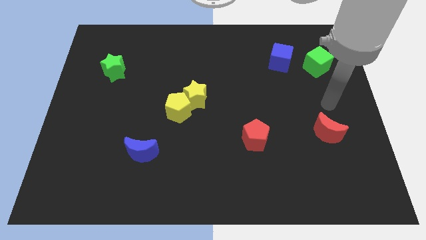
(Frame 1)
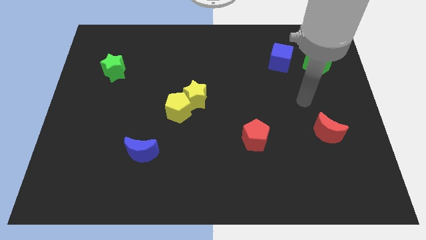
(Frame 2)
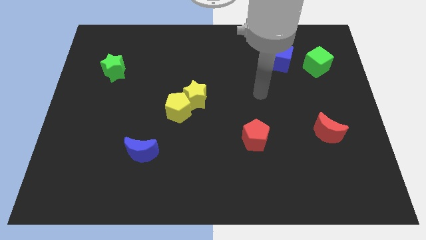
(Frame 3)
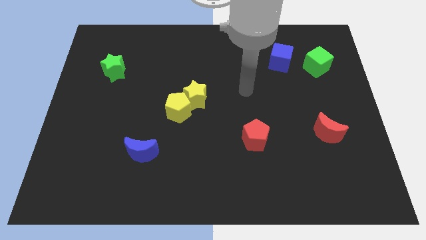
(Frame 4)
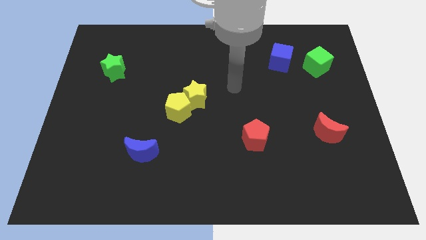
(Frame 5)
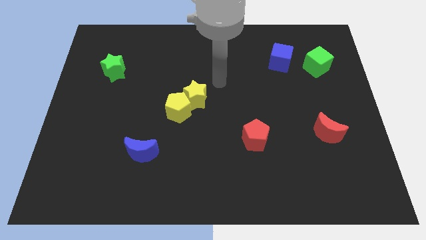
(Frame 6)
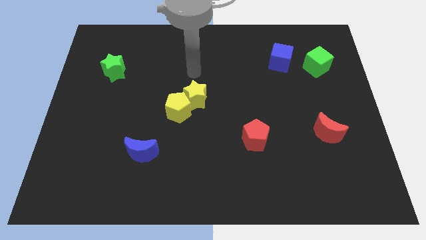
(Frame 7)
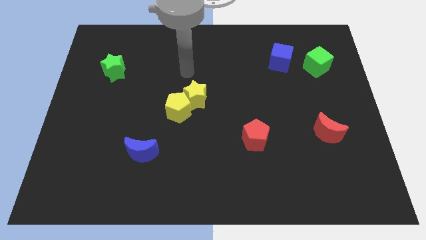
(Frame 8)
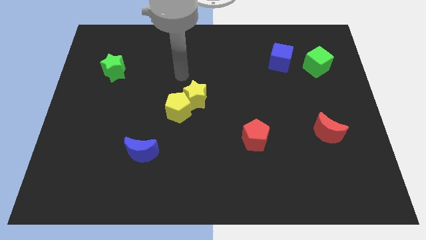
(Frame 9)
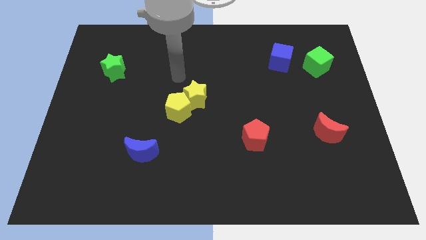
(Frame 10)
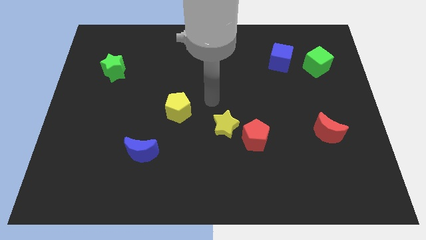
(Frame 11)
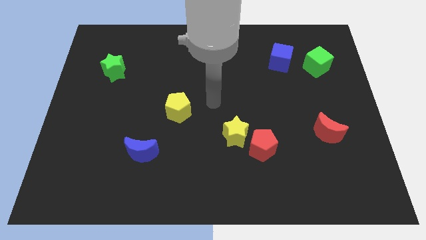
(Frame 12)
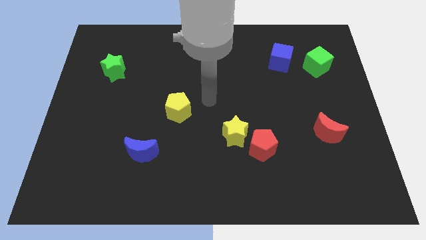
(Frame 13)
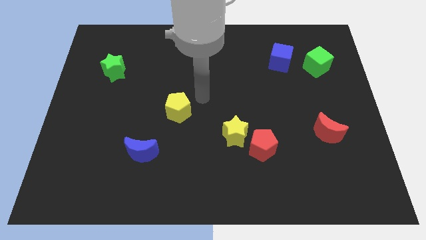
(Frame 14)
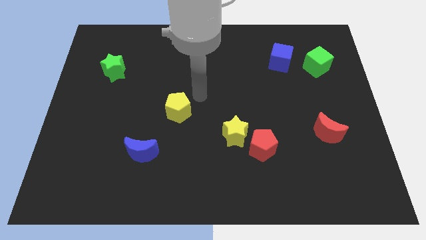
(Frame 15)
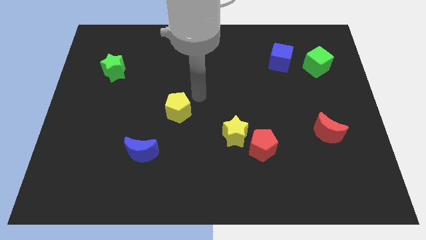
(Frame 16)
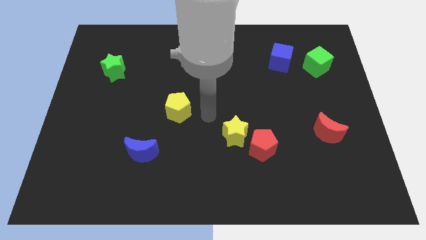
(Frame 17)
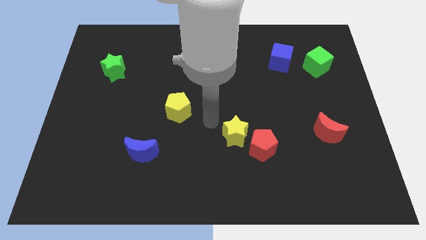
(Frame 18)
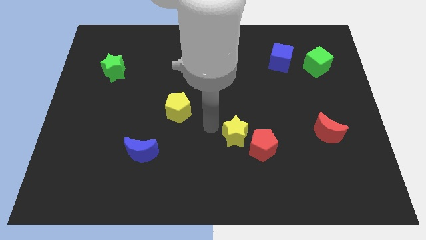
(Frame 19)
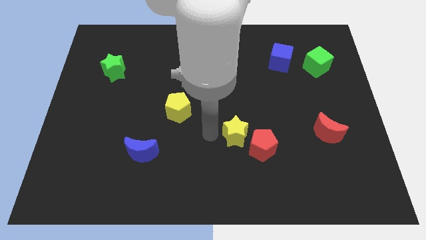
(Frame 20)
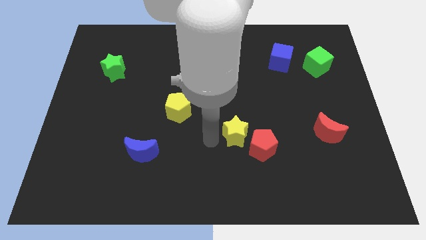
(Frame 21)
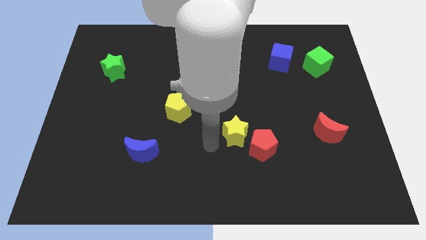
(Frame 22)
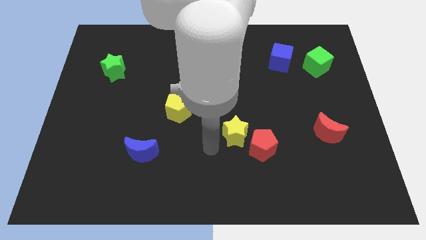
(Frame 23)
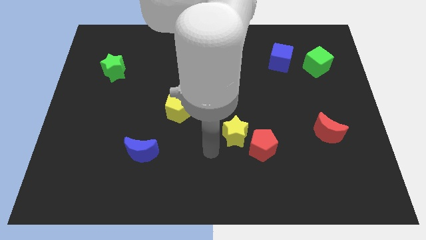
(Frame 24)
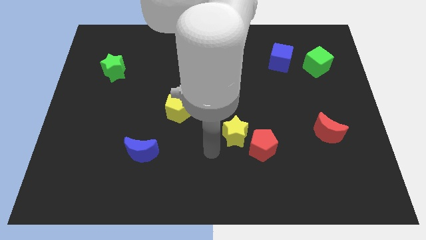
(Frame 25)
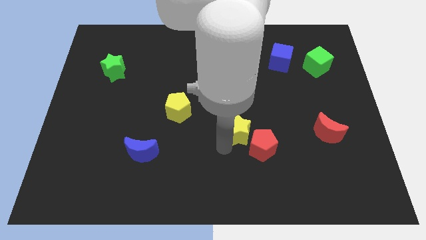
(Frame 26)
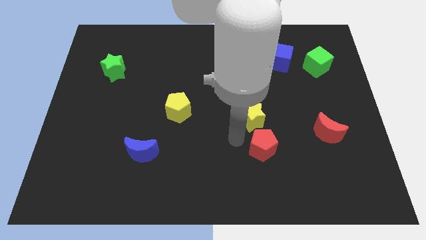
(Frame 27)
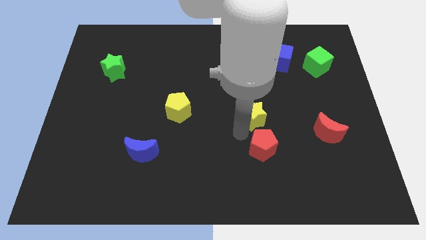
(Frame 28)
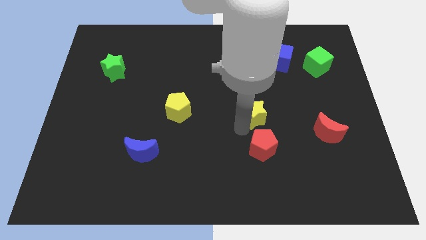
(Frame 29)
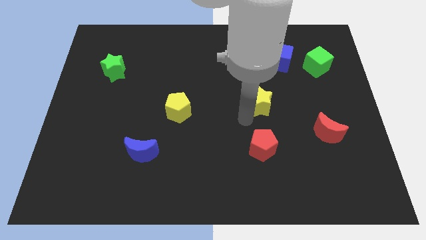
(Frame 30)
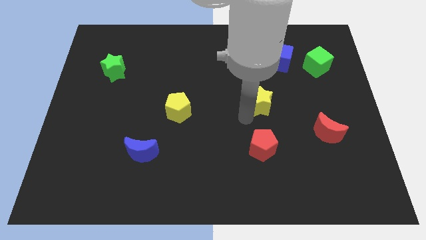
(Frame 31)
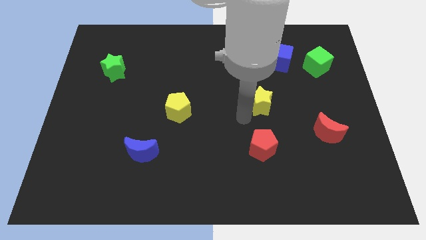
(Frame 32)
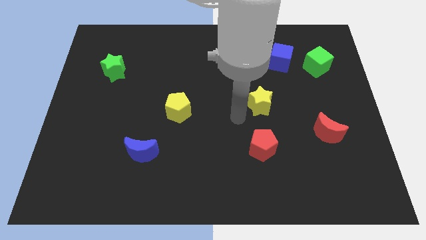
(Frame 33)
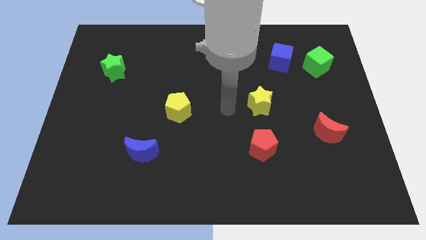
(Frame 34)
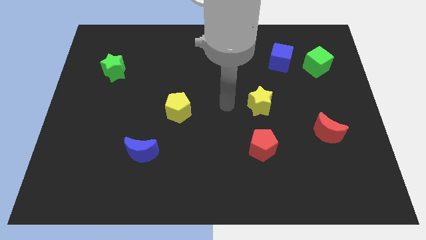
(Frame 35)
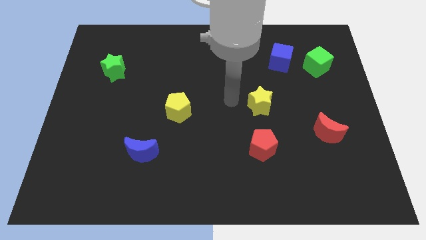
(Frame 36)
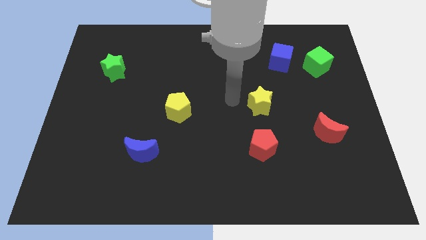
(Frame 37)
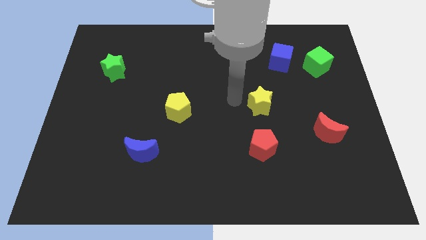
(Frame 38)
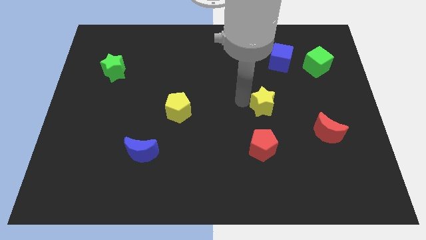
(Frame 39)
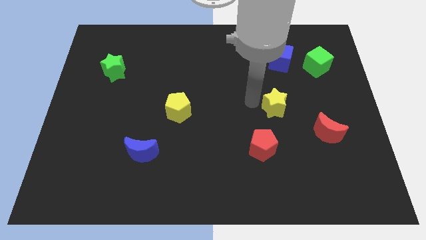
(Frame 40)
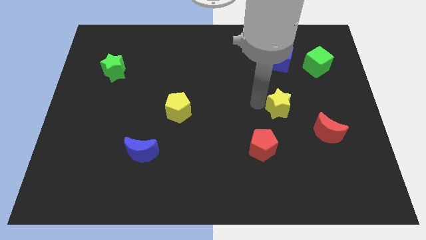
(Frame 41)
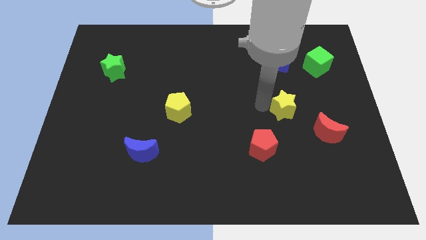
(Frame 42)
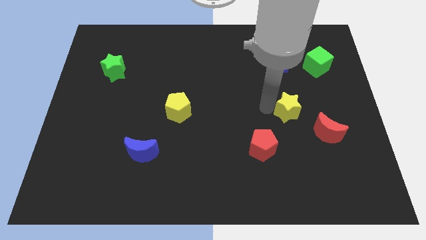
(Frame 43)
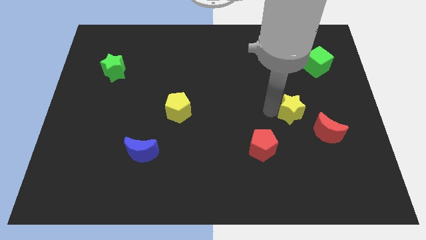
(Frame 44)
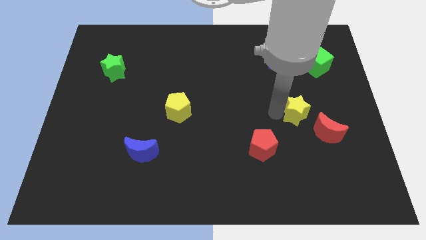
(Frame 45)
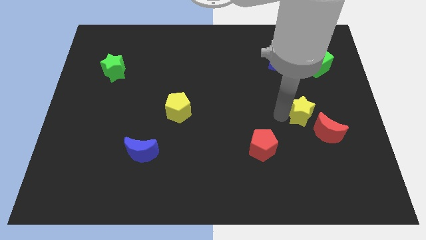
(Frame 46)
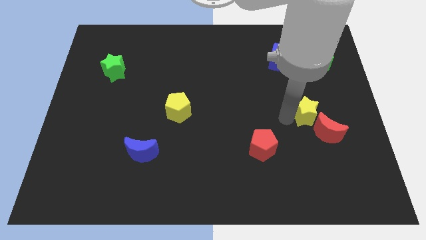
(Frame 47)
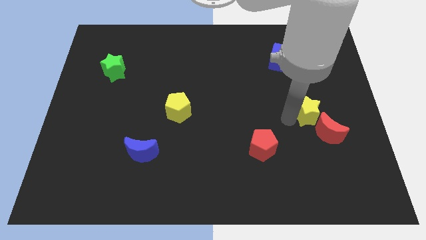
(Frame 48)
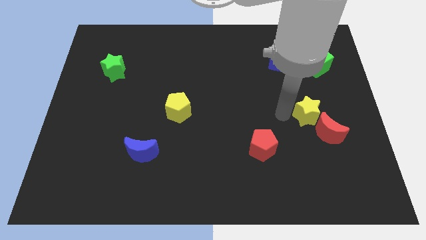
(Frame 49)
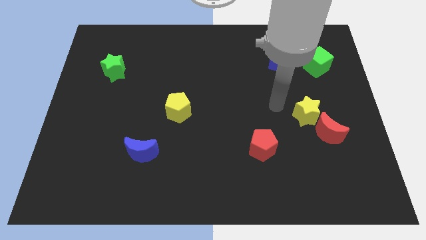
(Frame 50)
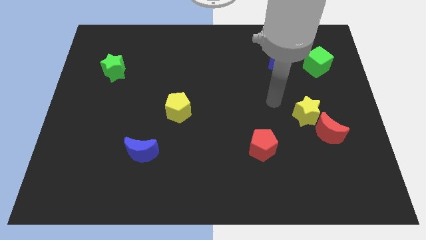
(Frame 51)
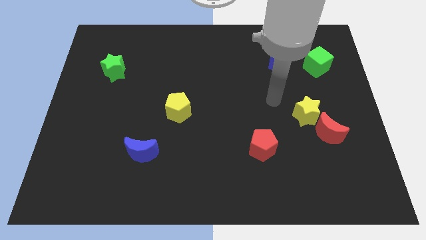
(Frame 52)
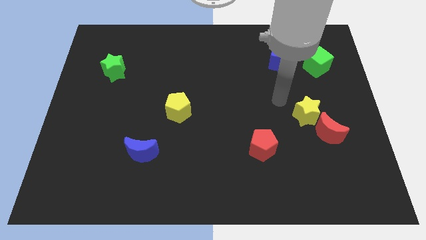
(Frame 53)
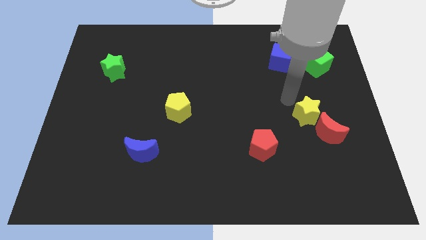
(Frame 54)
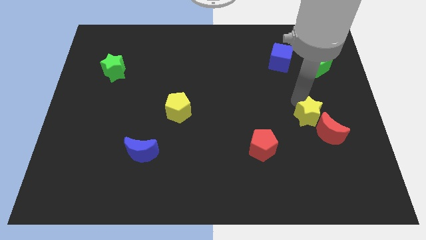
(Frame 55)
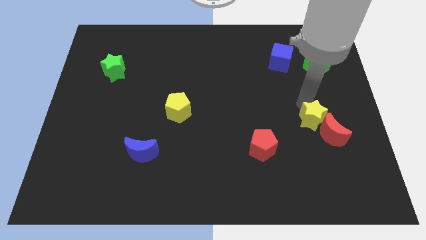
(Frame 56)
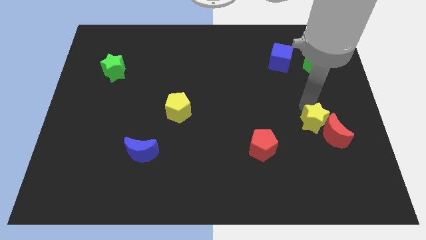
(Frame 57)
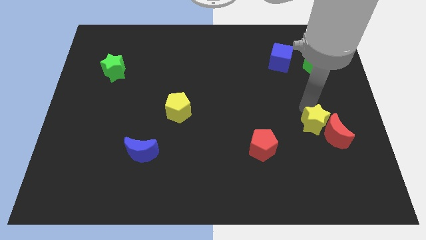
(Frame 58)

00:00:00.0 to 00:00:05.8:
push the yellow star close to the red moon

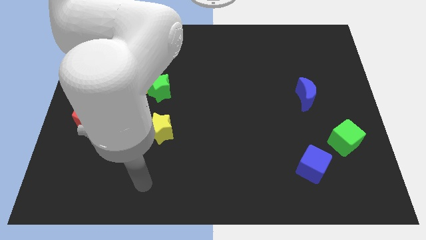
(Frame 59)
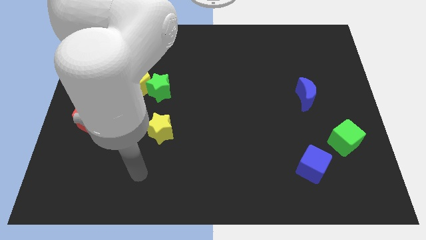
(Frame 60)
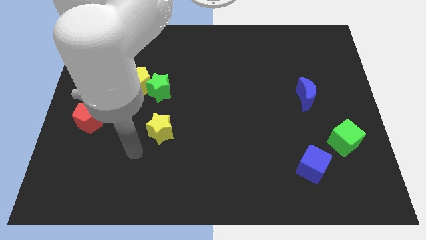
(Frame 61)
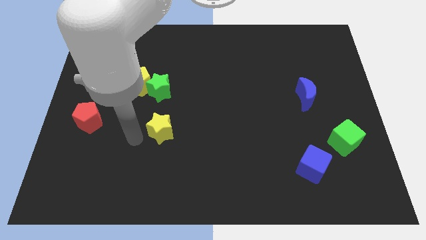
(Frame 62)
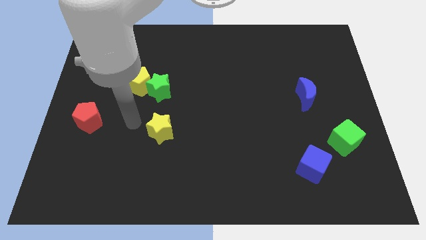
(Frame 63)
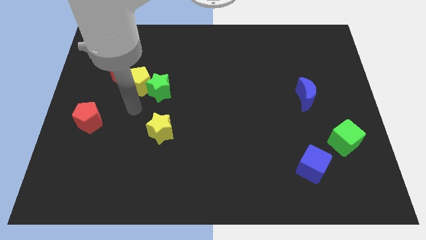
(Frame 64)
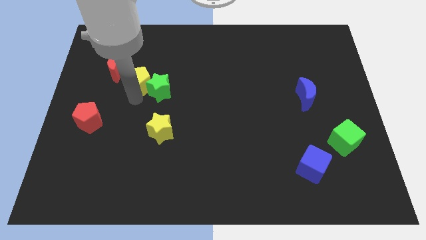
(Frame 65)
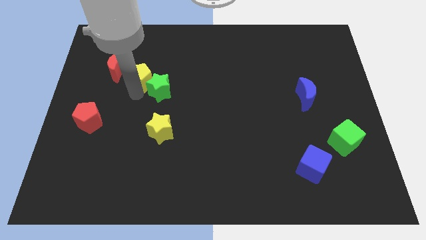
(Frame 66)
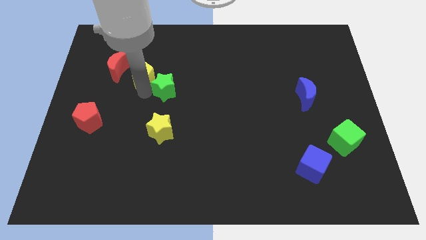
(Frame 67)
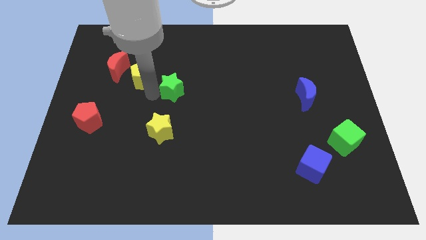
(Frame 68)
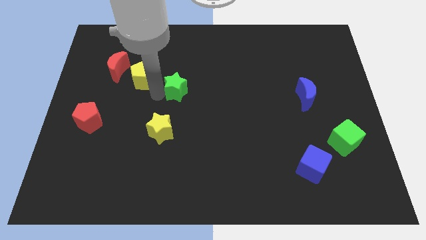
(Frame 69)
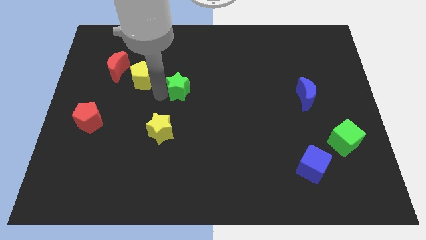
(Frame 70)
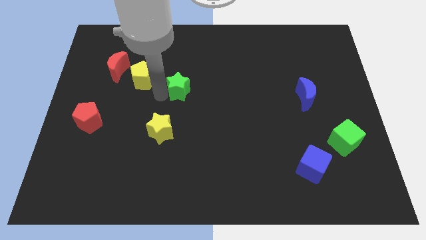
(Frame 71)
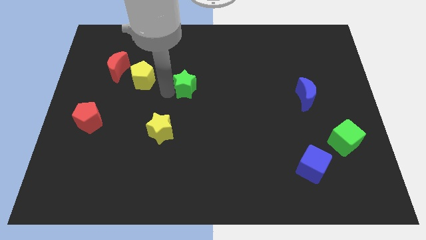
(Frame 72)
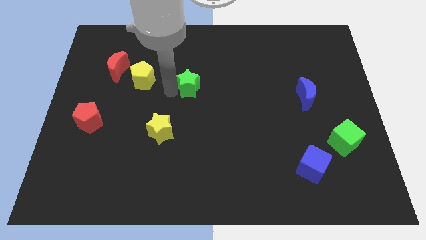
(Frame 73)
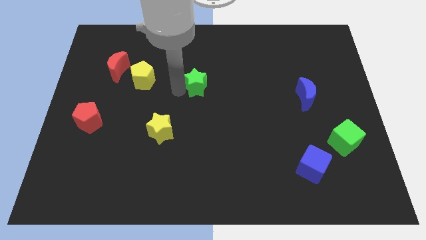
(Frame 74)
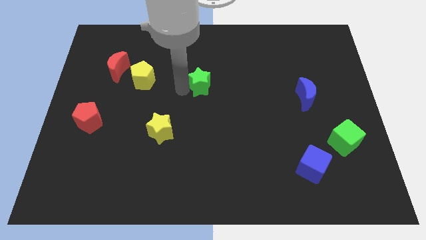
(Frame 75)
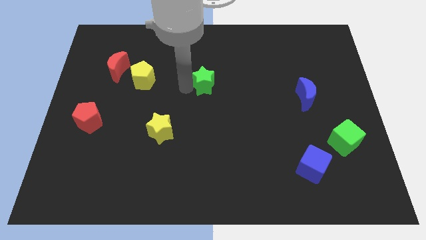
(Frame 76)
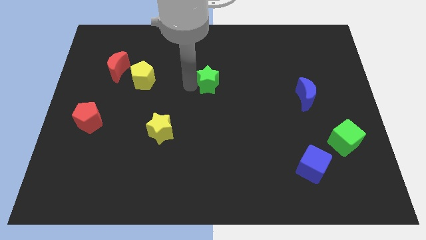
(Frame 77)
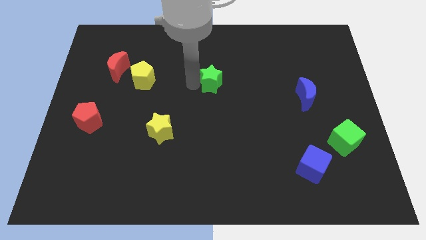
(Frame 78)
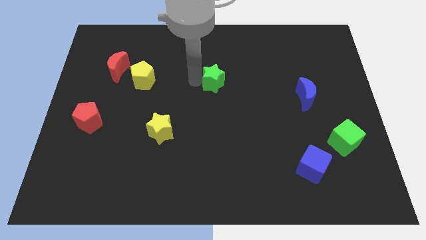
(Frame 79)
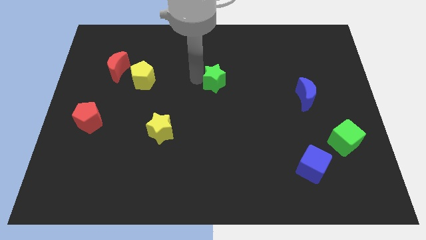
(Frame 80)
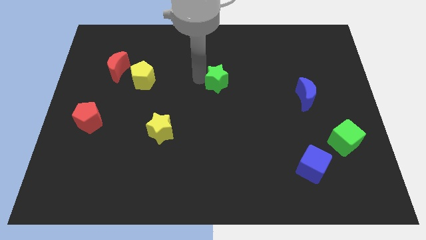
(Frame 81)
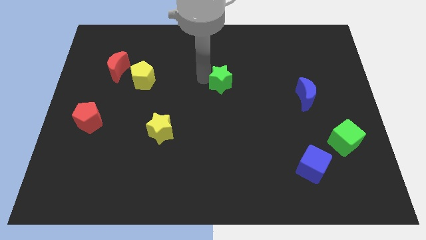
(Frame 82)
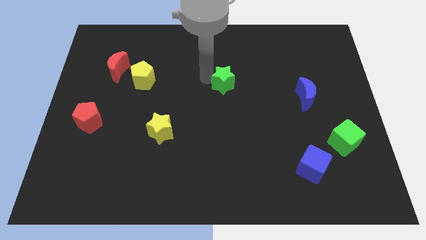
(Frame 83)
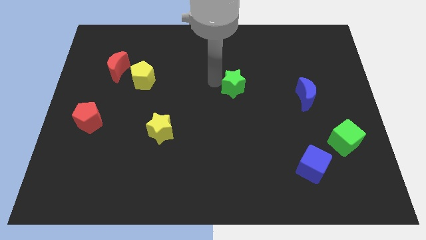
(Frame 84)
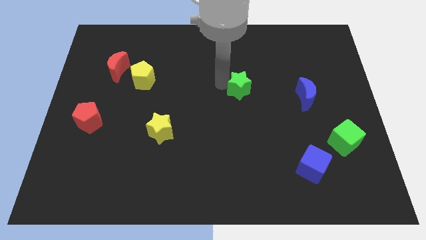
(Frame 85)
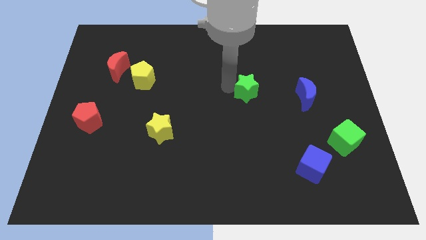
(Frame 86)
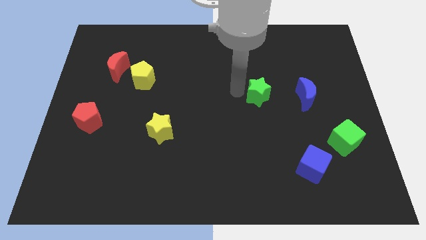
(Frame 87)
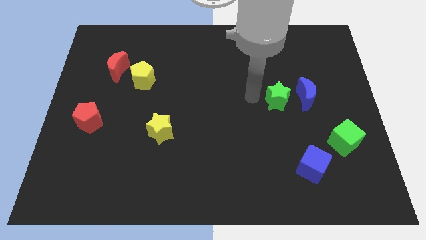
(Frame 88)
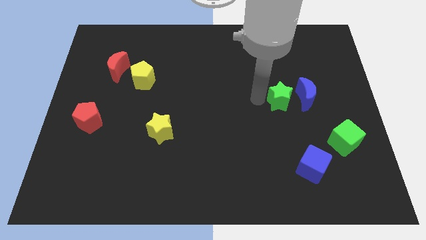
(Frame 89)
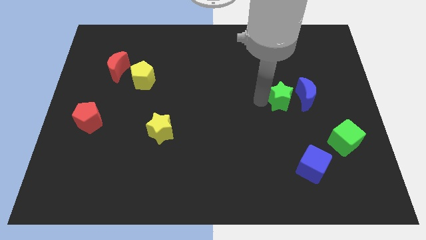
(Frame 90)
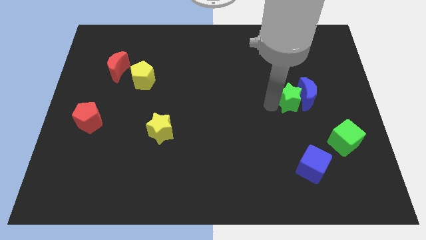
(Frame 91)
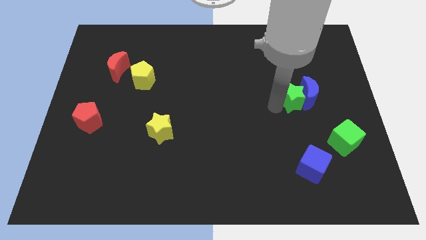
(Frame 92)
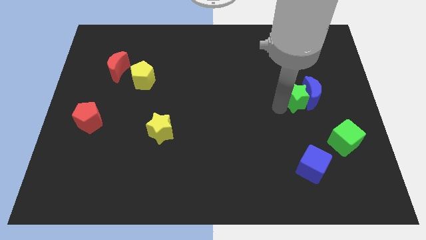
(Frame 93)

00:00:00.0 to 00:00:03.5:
move the green star to the blue moon
